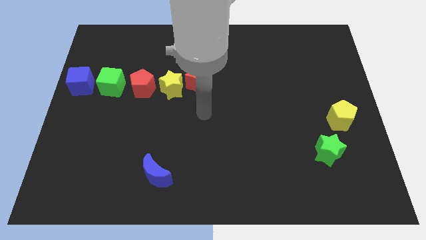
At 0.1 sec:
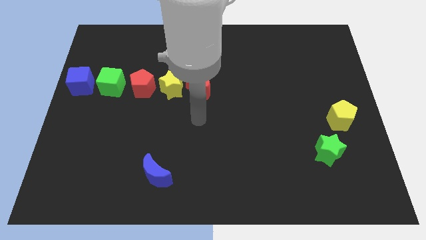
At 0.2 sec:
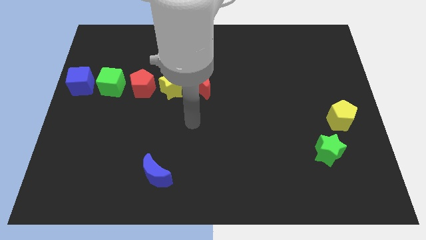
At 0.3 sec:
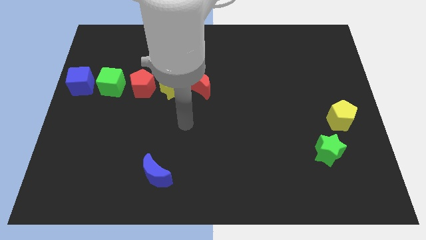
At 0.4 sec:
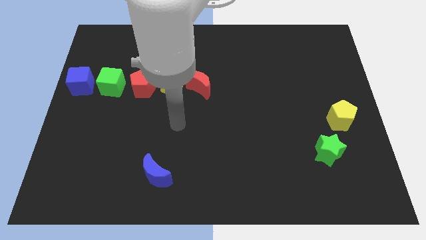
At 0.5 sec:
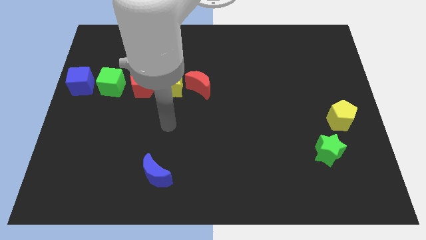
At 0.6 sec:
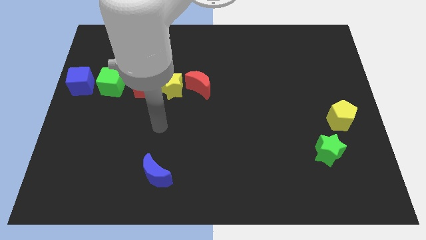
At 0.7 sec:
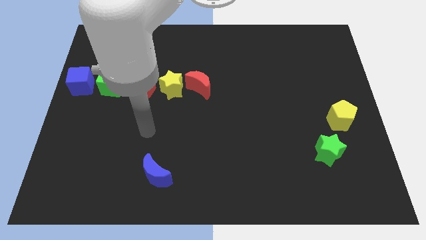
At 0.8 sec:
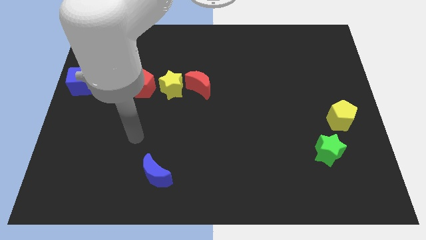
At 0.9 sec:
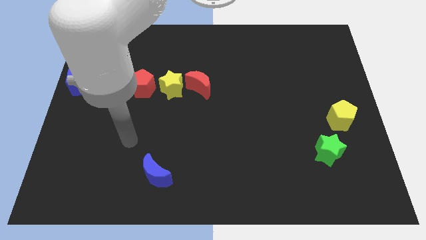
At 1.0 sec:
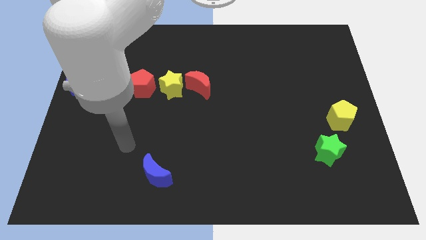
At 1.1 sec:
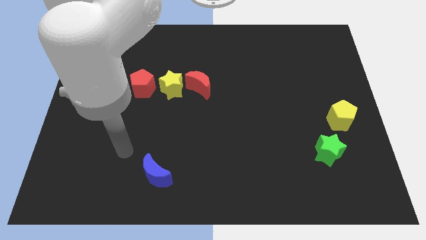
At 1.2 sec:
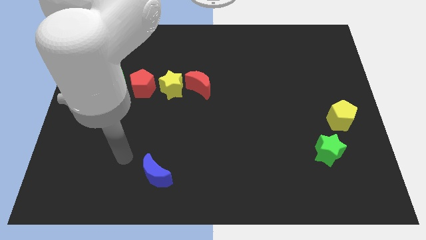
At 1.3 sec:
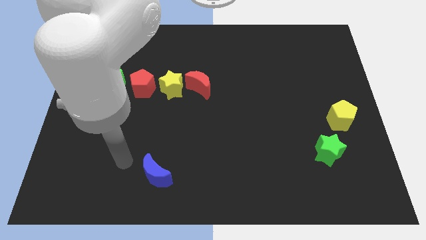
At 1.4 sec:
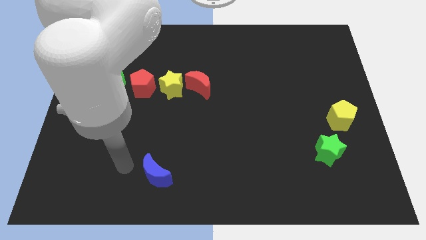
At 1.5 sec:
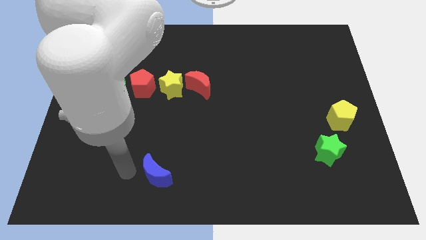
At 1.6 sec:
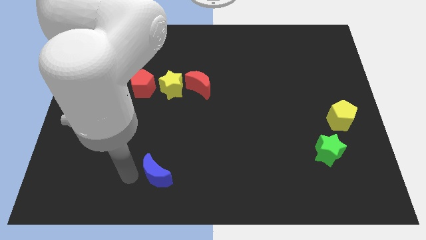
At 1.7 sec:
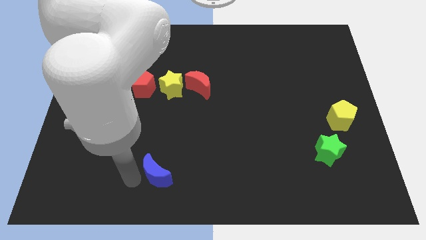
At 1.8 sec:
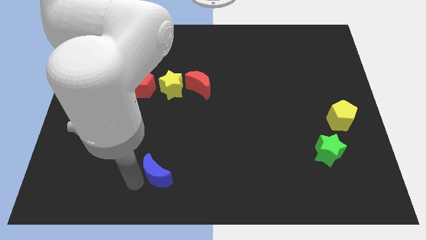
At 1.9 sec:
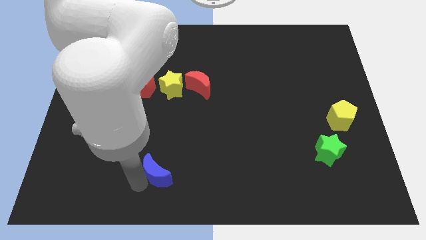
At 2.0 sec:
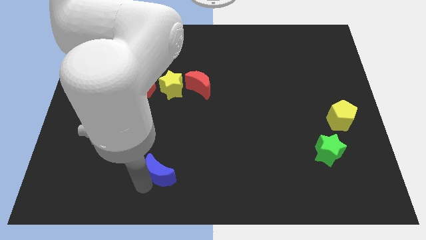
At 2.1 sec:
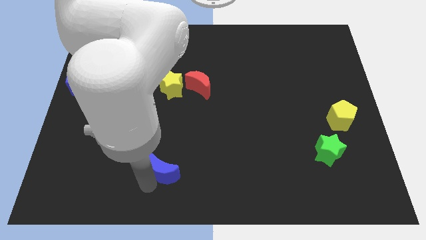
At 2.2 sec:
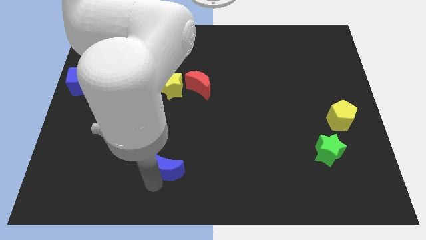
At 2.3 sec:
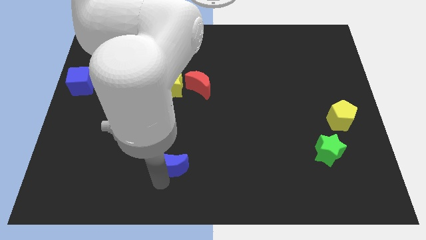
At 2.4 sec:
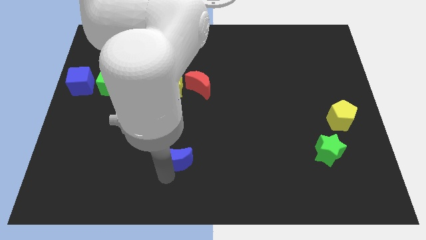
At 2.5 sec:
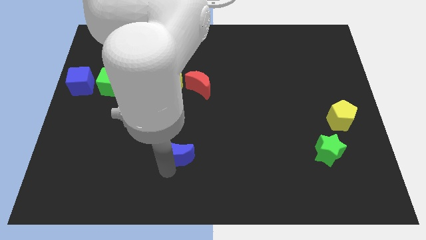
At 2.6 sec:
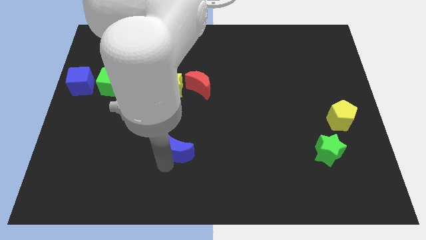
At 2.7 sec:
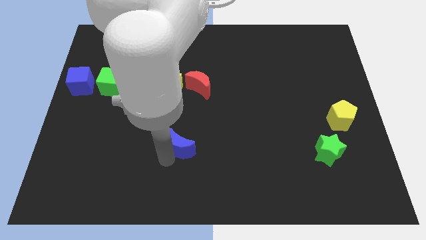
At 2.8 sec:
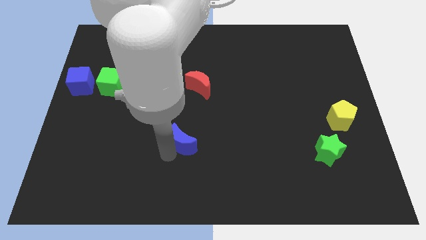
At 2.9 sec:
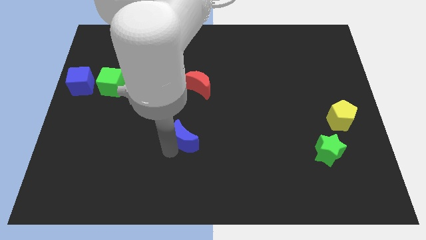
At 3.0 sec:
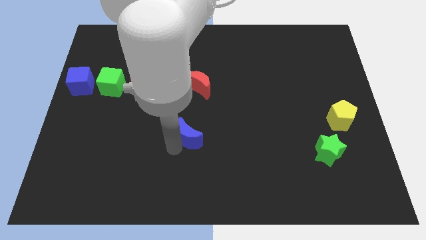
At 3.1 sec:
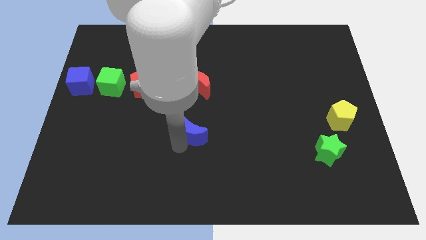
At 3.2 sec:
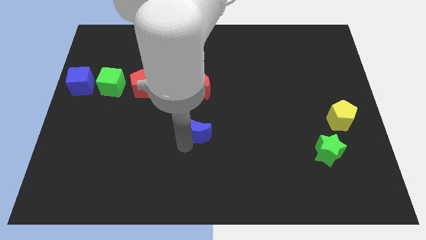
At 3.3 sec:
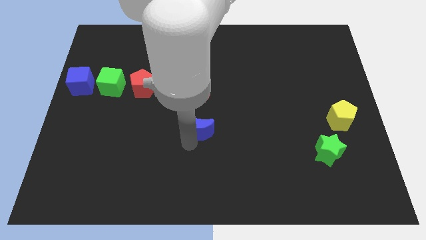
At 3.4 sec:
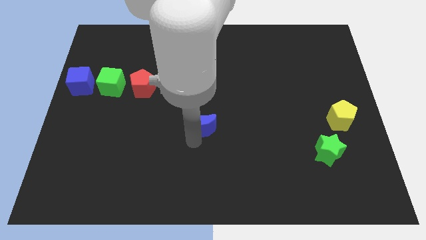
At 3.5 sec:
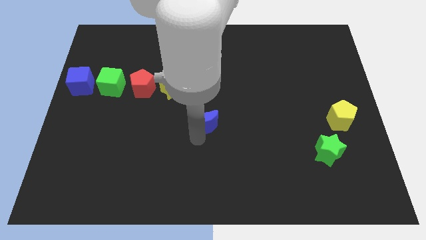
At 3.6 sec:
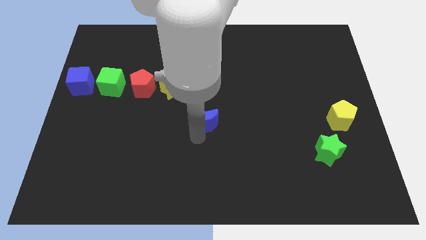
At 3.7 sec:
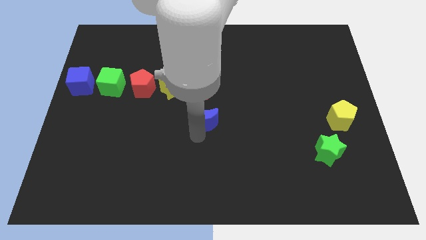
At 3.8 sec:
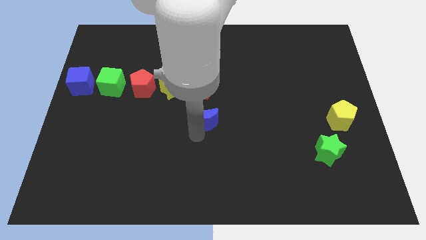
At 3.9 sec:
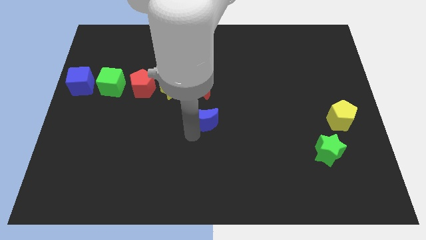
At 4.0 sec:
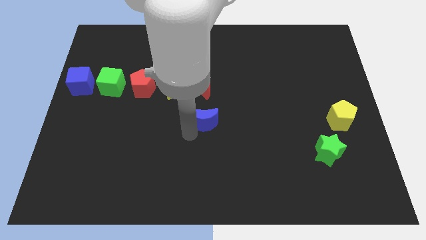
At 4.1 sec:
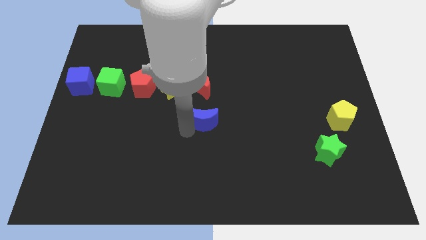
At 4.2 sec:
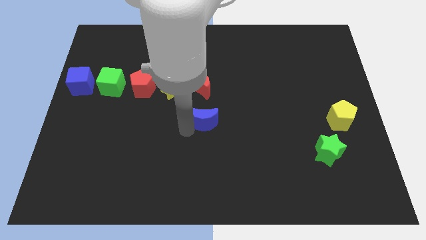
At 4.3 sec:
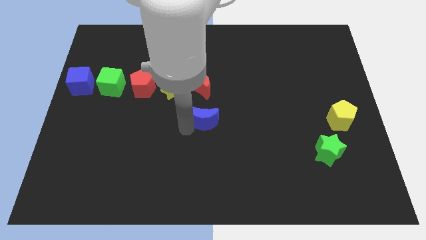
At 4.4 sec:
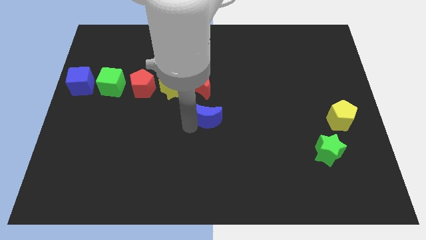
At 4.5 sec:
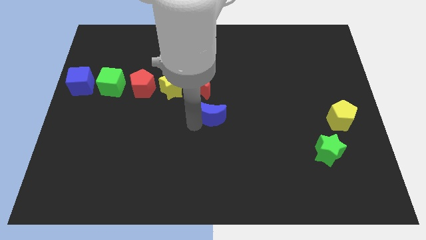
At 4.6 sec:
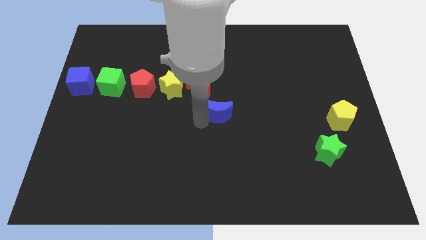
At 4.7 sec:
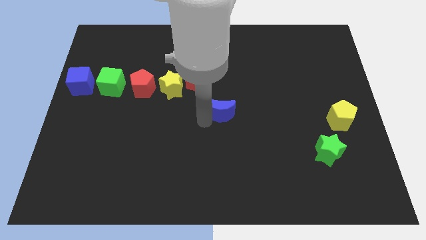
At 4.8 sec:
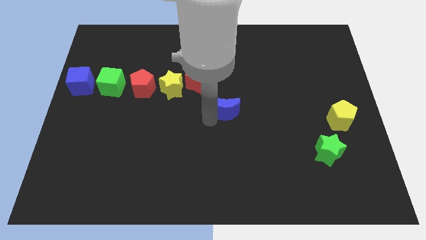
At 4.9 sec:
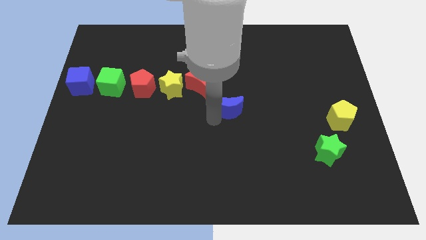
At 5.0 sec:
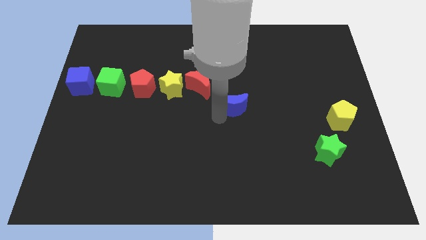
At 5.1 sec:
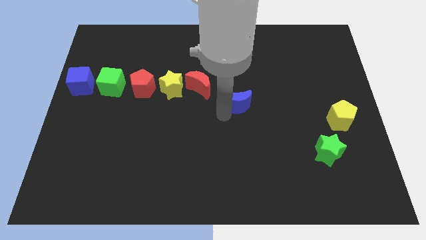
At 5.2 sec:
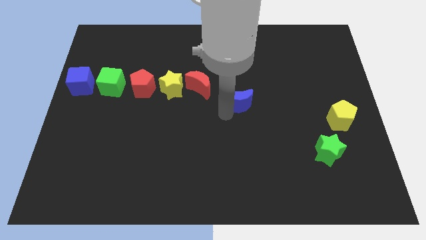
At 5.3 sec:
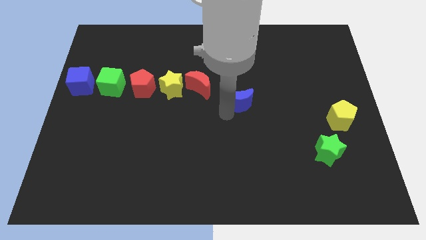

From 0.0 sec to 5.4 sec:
push the blue crescent diagonally to the right of the red crescent

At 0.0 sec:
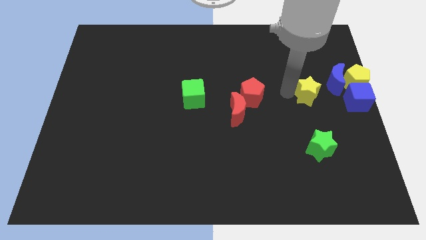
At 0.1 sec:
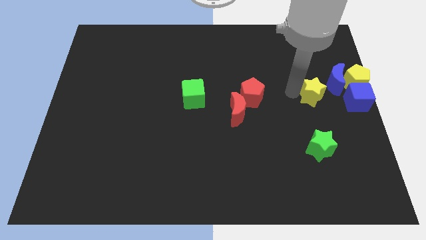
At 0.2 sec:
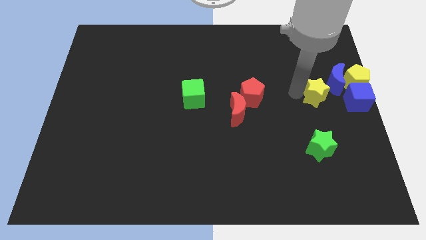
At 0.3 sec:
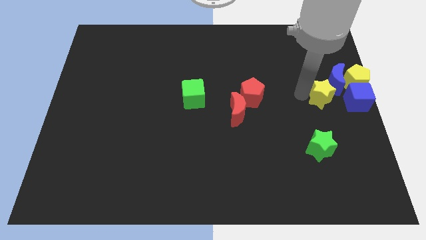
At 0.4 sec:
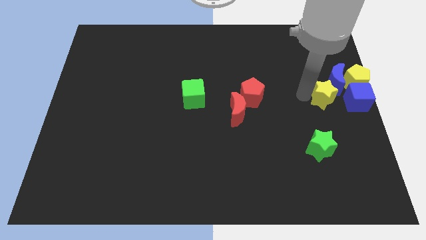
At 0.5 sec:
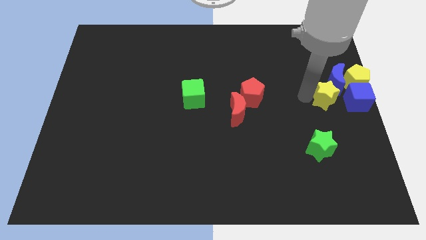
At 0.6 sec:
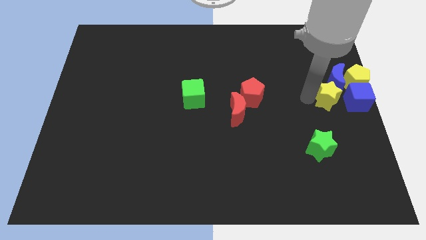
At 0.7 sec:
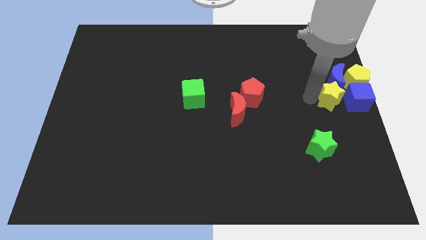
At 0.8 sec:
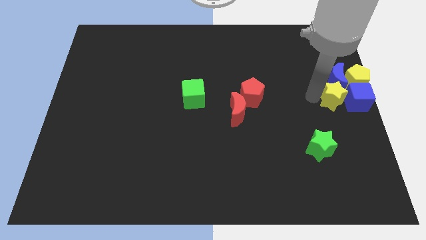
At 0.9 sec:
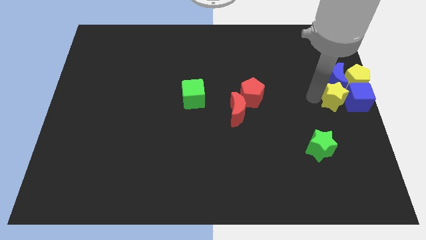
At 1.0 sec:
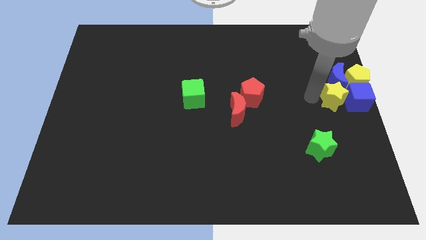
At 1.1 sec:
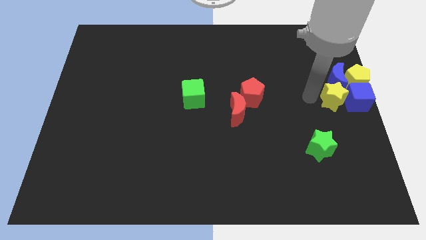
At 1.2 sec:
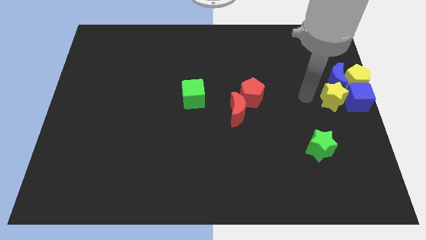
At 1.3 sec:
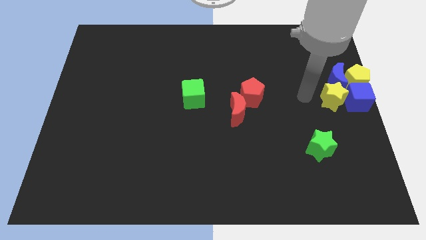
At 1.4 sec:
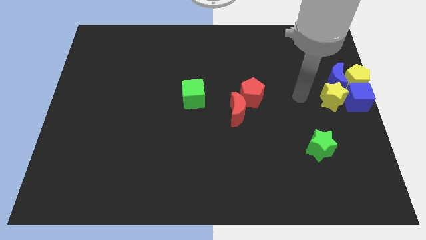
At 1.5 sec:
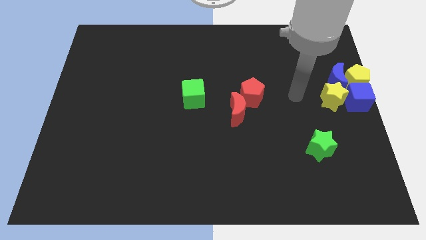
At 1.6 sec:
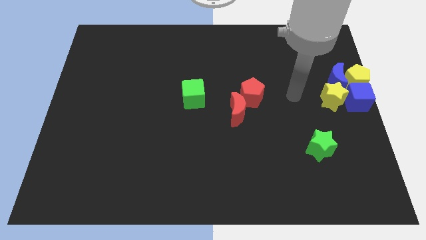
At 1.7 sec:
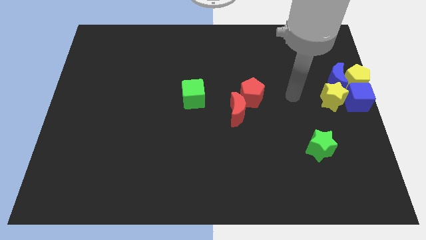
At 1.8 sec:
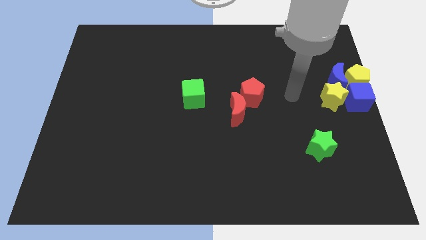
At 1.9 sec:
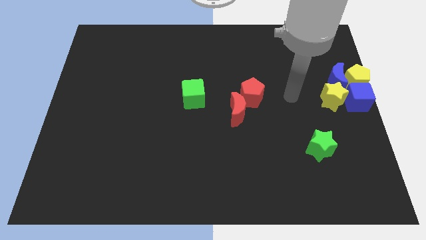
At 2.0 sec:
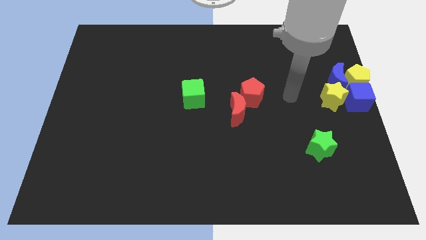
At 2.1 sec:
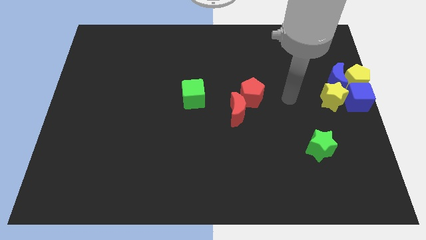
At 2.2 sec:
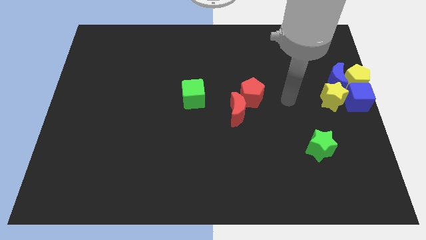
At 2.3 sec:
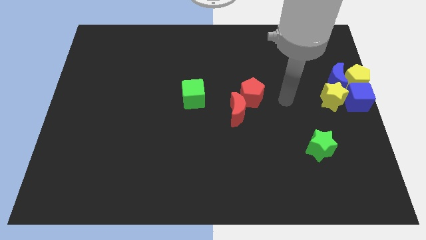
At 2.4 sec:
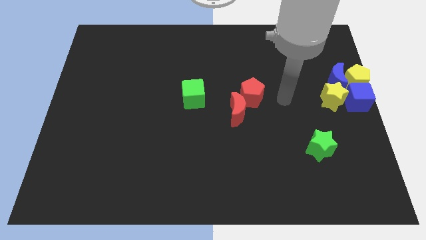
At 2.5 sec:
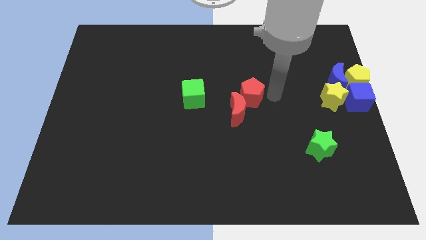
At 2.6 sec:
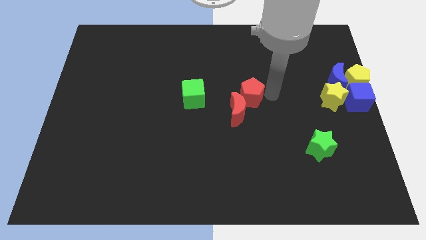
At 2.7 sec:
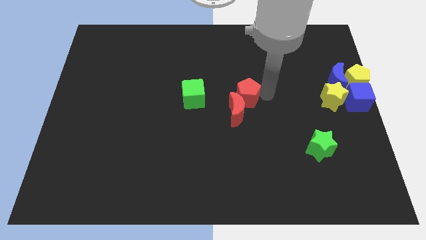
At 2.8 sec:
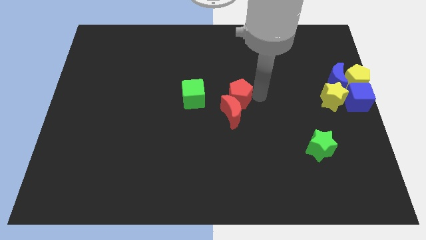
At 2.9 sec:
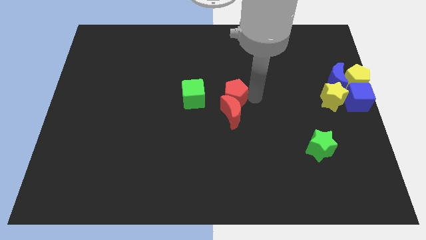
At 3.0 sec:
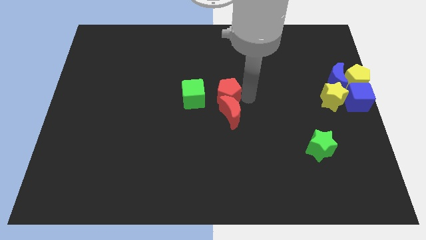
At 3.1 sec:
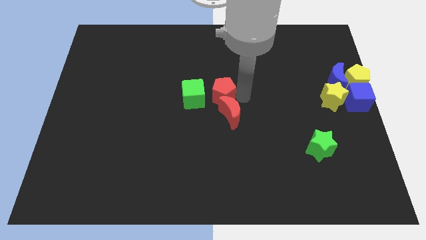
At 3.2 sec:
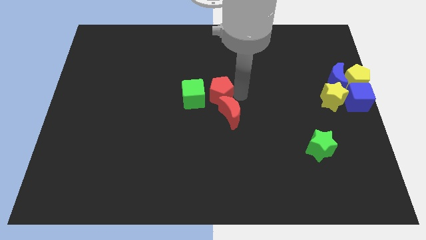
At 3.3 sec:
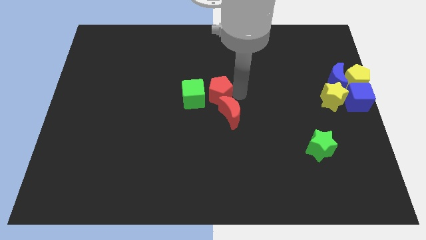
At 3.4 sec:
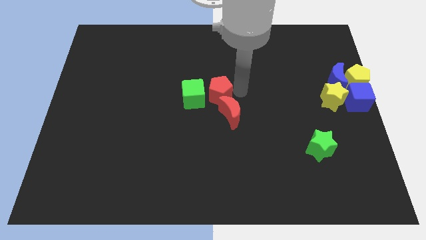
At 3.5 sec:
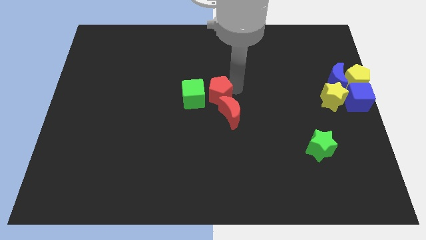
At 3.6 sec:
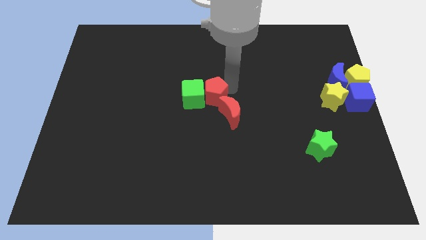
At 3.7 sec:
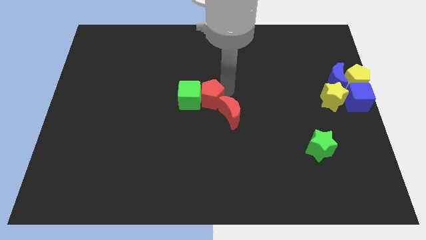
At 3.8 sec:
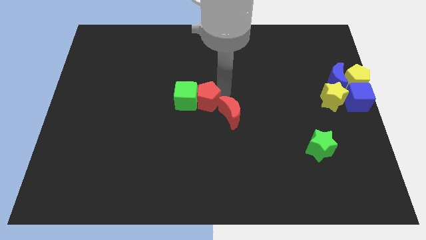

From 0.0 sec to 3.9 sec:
move red pentagon in to green cube
